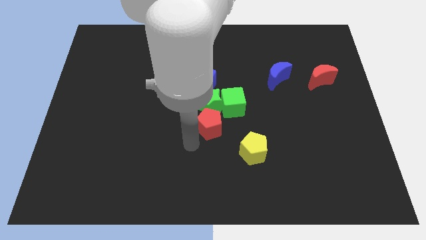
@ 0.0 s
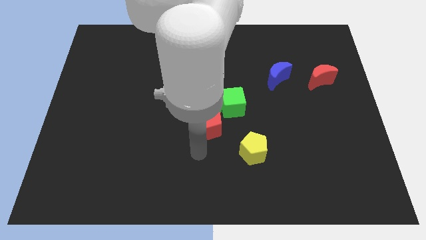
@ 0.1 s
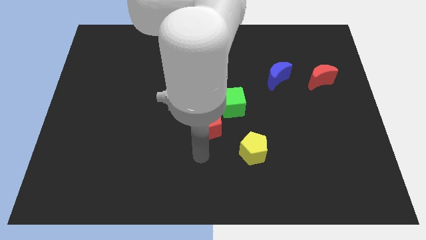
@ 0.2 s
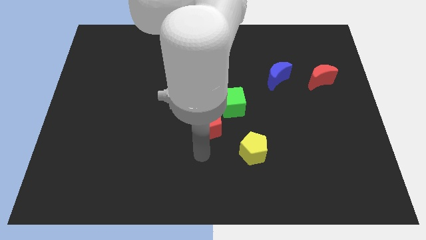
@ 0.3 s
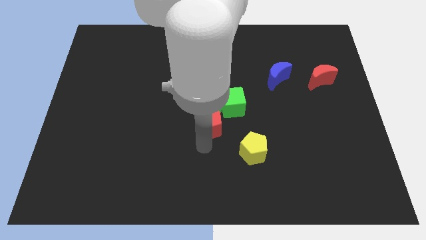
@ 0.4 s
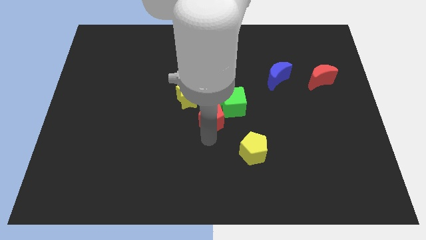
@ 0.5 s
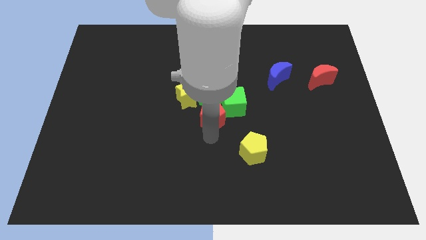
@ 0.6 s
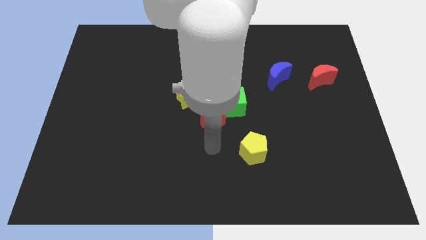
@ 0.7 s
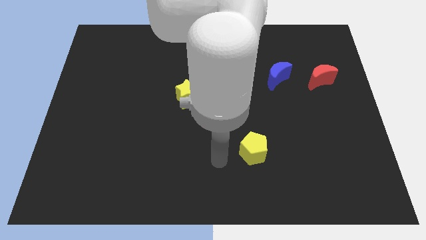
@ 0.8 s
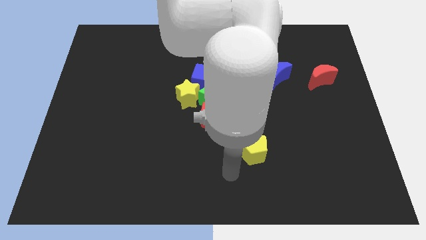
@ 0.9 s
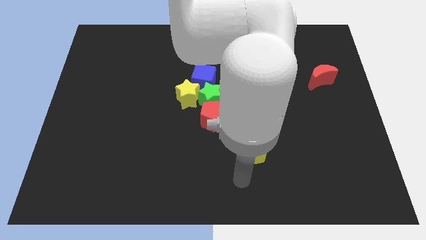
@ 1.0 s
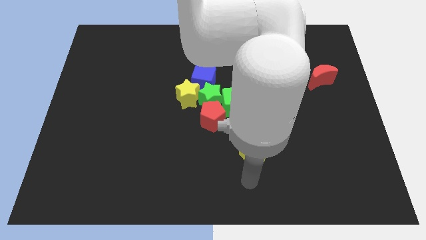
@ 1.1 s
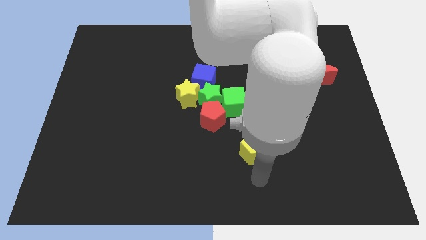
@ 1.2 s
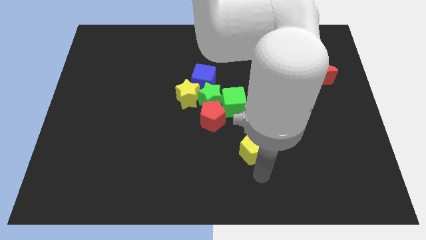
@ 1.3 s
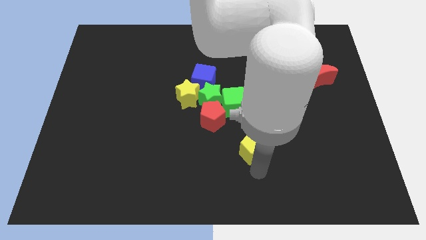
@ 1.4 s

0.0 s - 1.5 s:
point your arm below yellow star

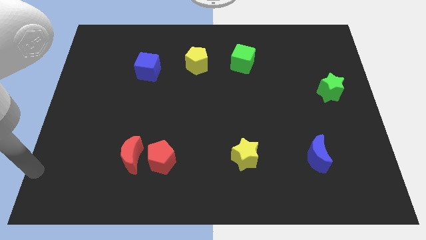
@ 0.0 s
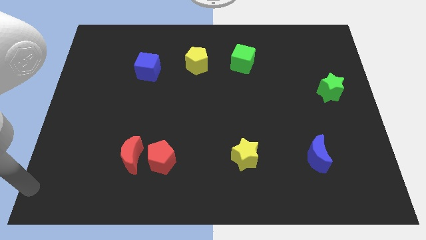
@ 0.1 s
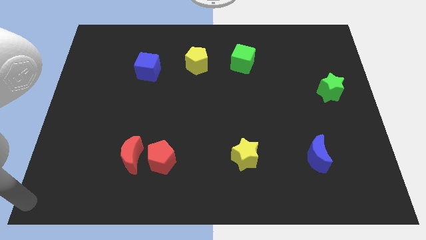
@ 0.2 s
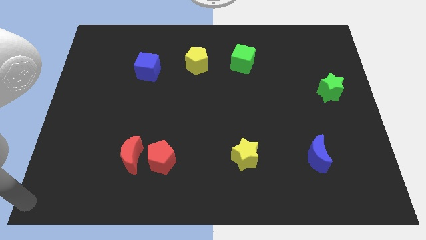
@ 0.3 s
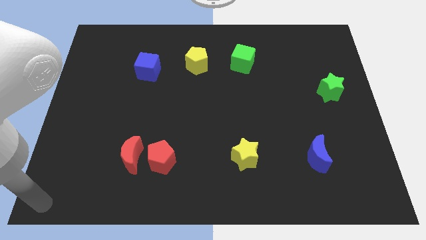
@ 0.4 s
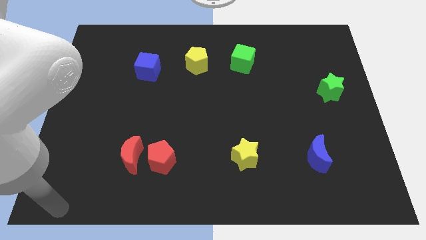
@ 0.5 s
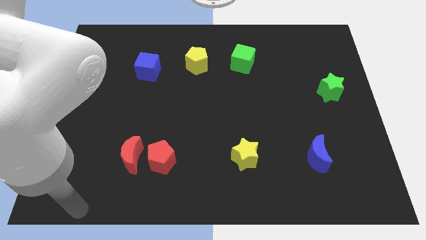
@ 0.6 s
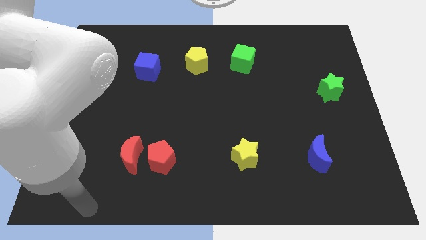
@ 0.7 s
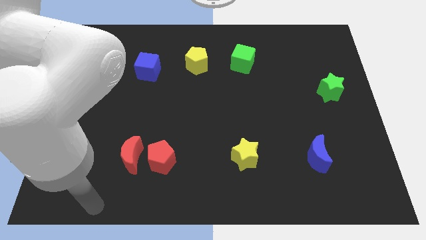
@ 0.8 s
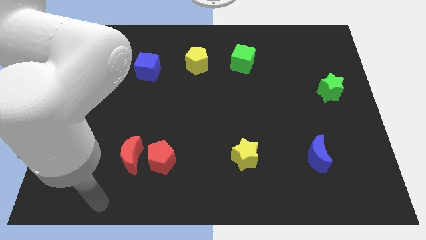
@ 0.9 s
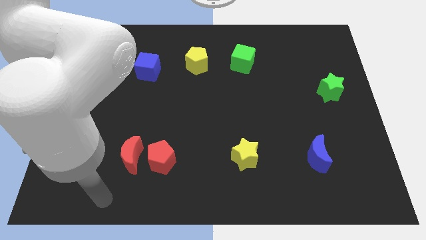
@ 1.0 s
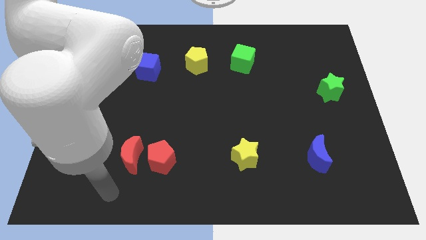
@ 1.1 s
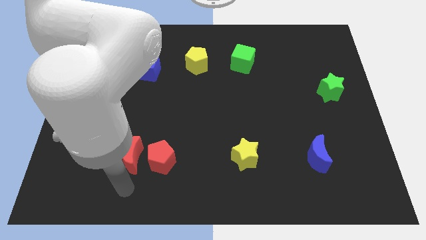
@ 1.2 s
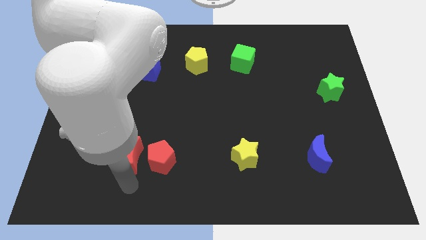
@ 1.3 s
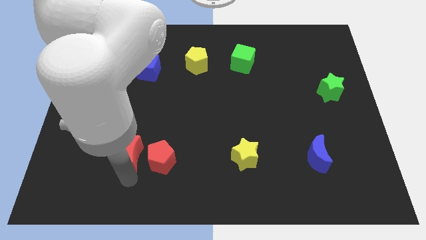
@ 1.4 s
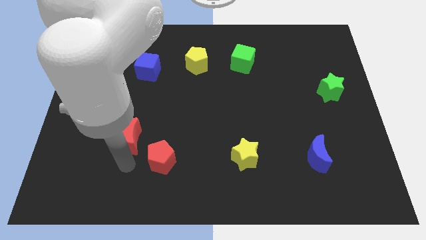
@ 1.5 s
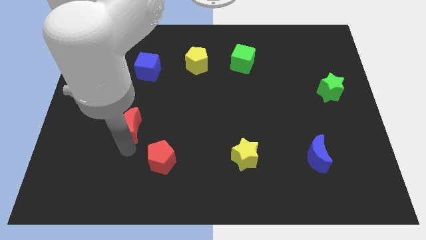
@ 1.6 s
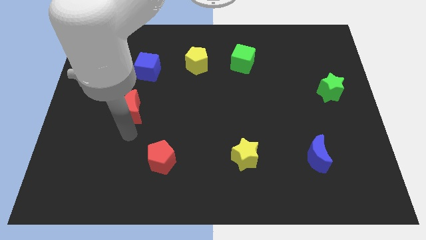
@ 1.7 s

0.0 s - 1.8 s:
separate the red crescent from the red pentagon

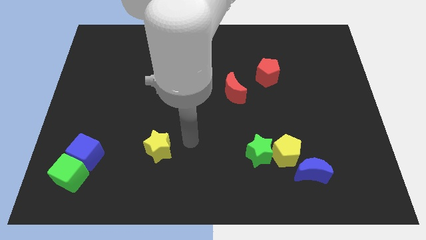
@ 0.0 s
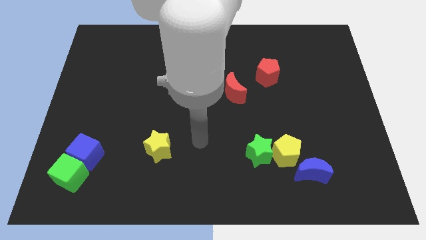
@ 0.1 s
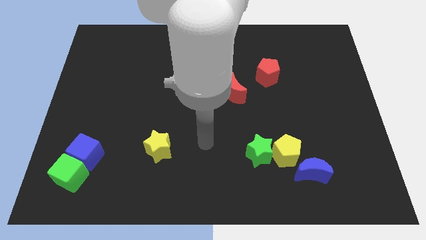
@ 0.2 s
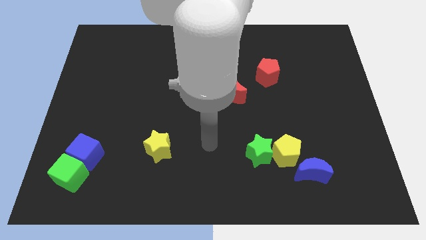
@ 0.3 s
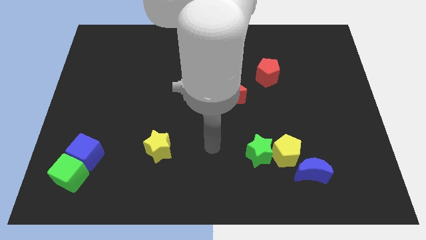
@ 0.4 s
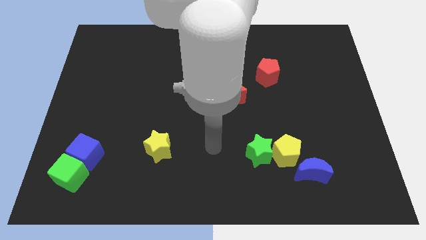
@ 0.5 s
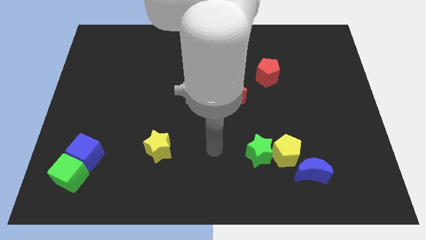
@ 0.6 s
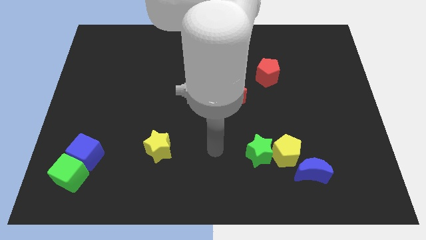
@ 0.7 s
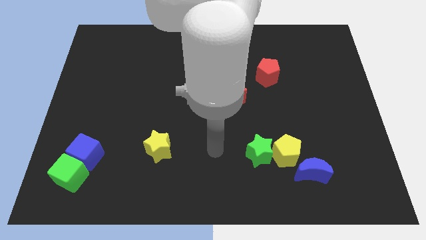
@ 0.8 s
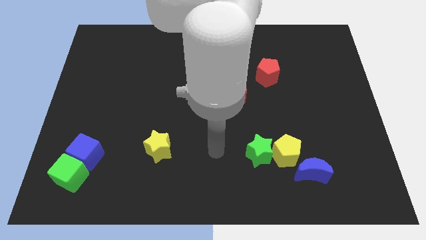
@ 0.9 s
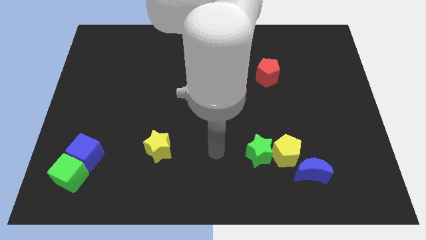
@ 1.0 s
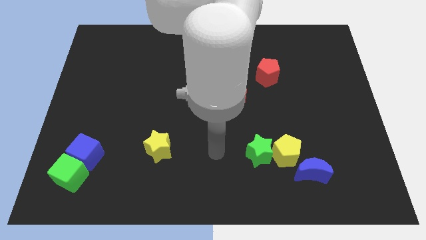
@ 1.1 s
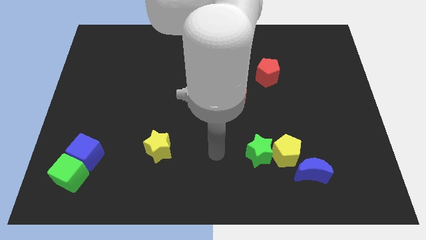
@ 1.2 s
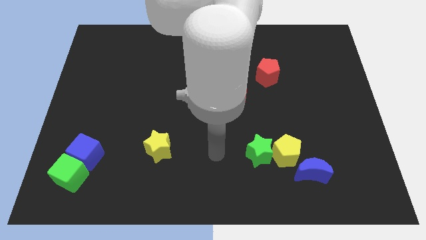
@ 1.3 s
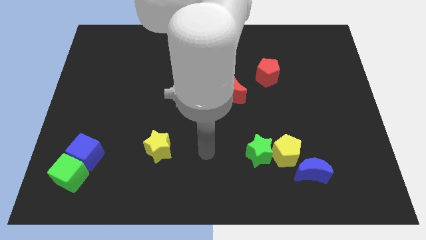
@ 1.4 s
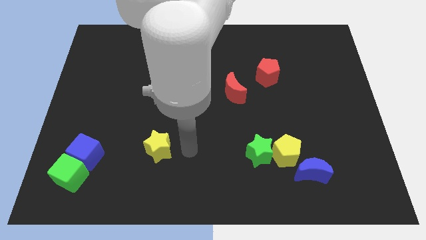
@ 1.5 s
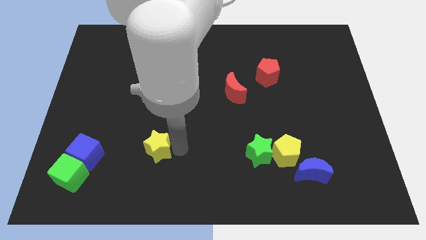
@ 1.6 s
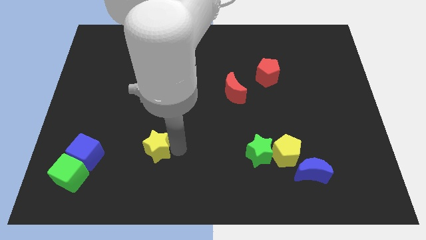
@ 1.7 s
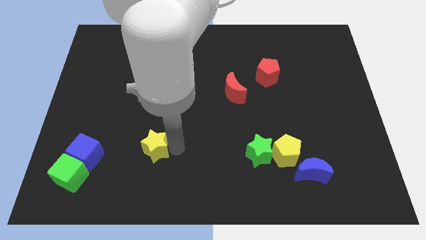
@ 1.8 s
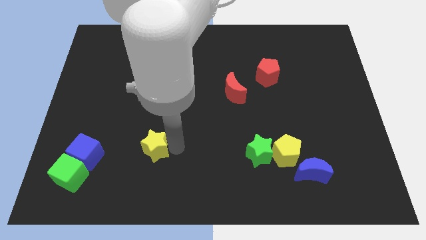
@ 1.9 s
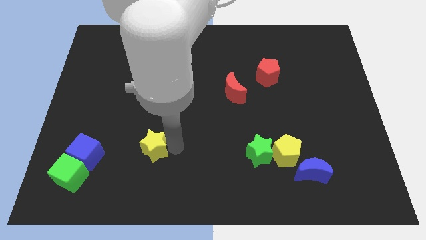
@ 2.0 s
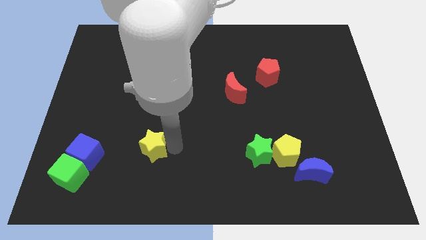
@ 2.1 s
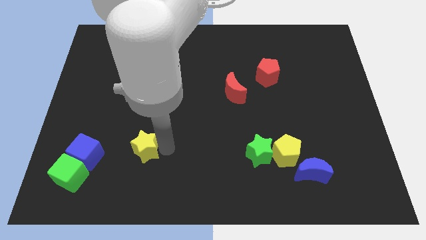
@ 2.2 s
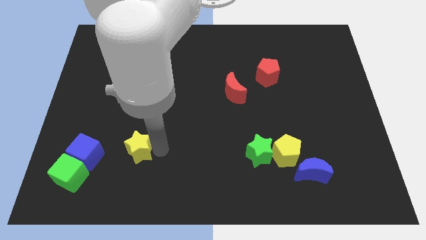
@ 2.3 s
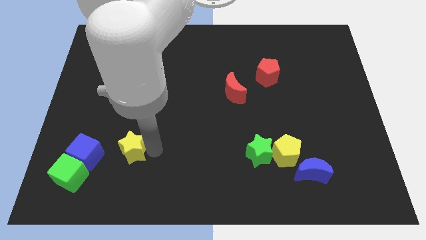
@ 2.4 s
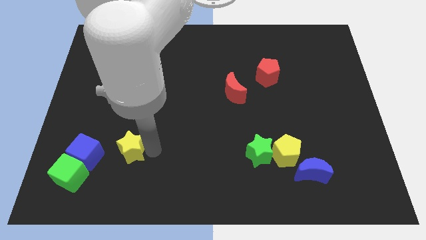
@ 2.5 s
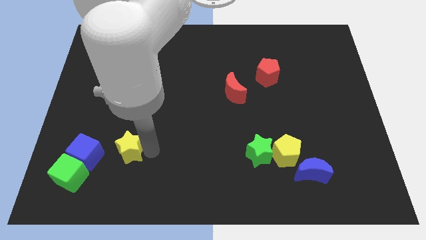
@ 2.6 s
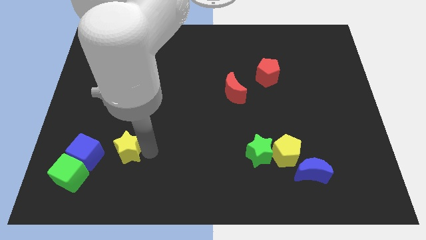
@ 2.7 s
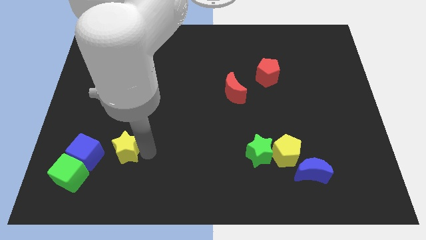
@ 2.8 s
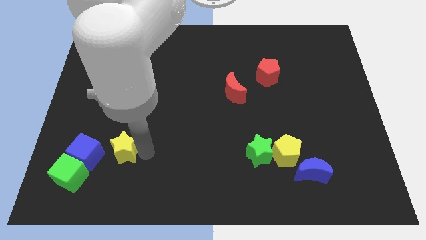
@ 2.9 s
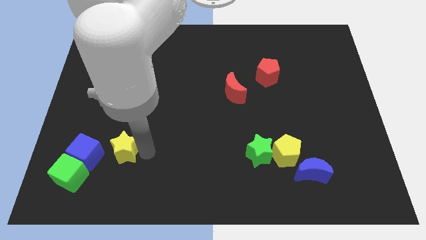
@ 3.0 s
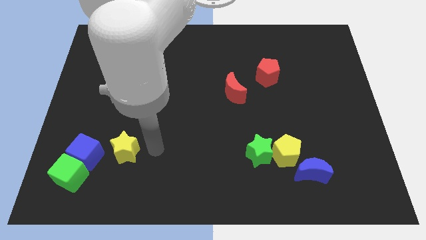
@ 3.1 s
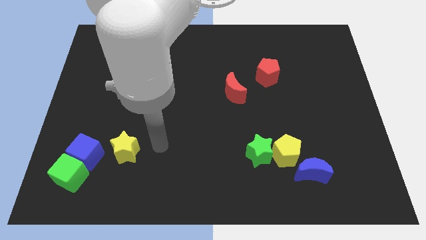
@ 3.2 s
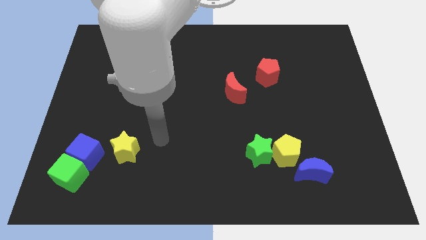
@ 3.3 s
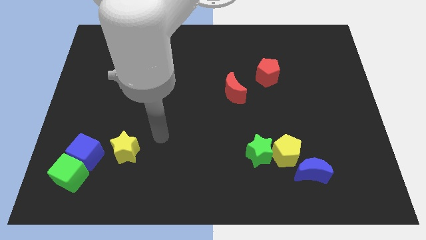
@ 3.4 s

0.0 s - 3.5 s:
push the yellow star into the blue cube

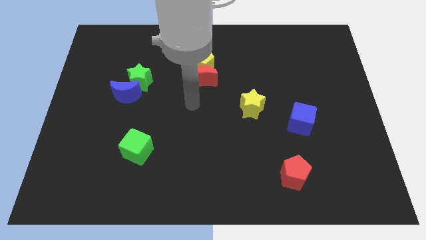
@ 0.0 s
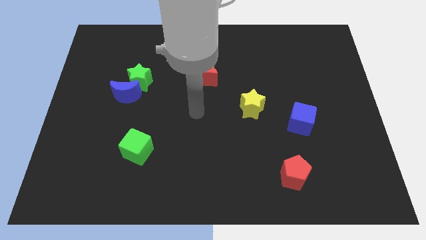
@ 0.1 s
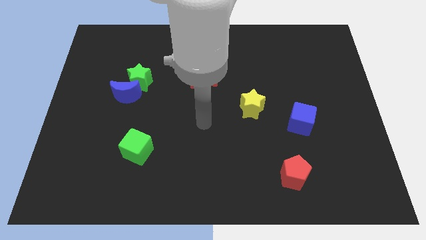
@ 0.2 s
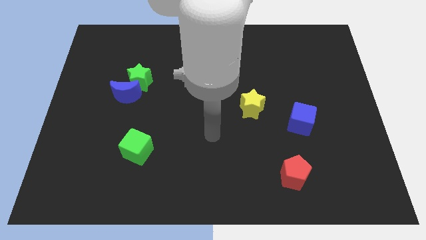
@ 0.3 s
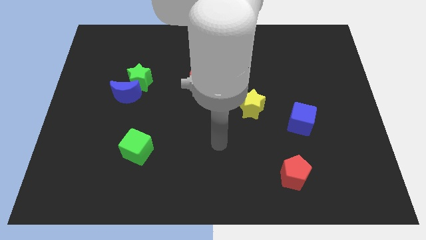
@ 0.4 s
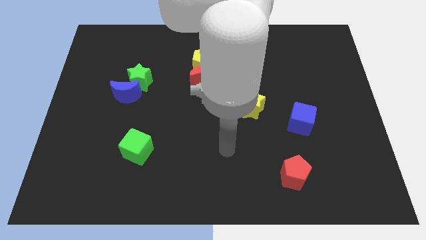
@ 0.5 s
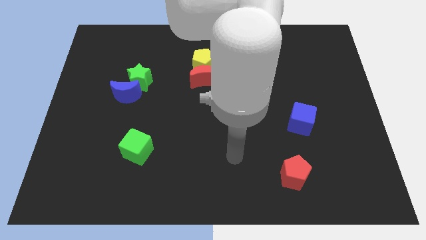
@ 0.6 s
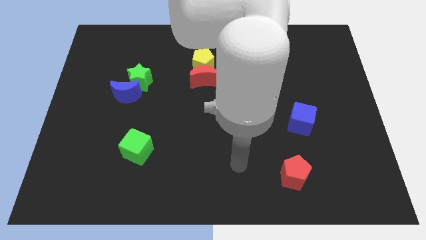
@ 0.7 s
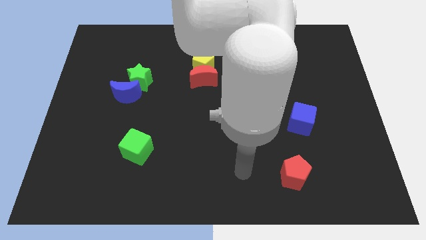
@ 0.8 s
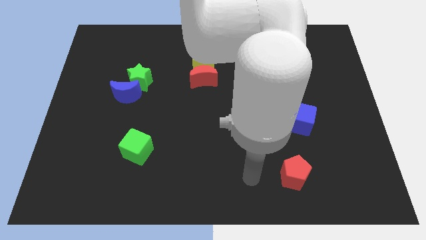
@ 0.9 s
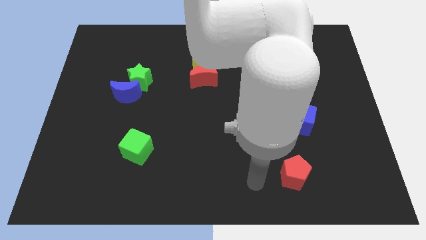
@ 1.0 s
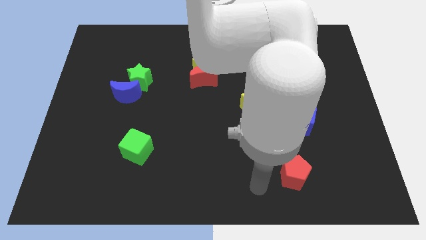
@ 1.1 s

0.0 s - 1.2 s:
move the arm away from the red crescent

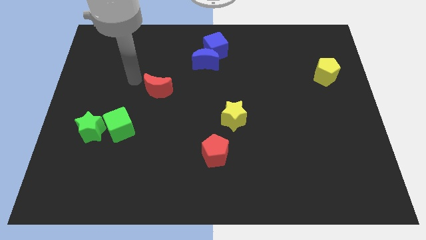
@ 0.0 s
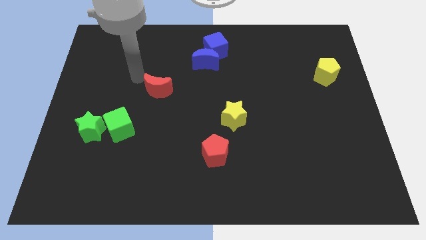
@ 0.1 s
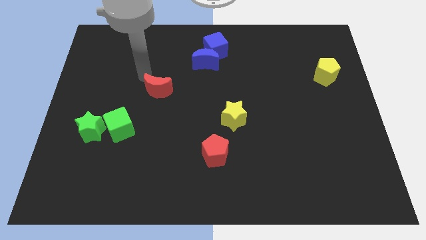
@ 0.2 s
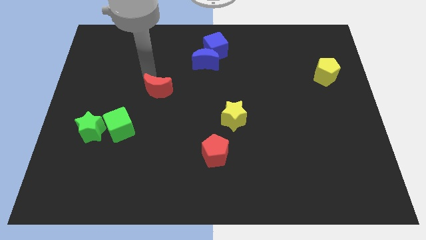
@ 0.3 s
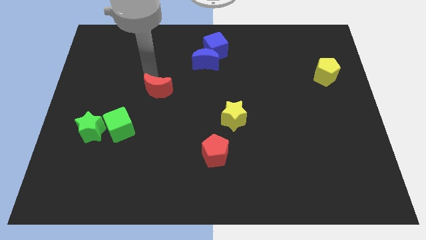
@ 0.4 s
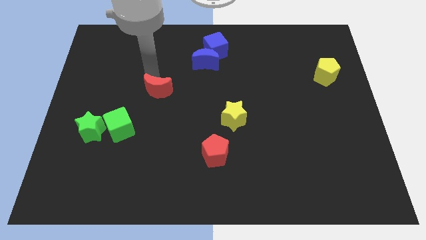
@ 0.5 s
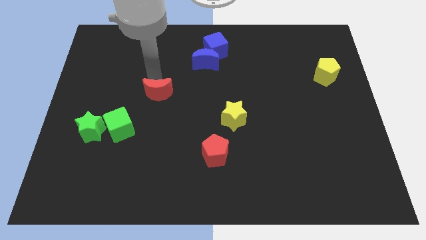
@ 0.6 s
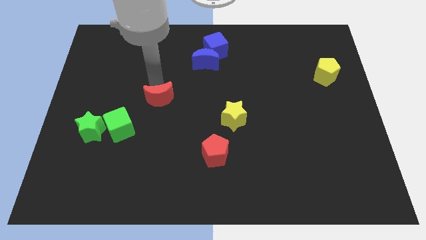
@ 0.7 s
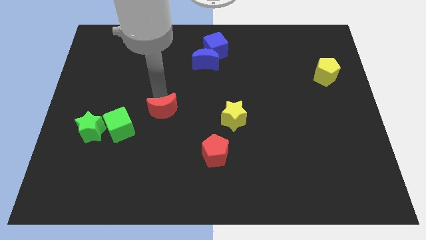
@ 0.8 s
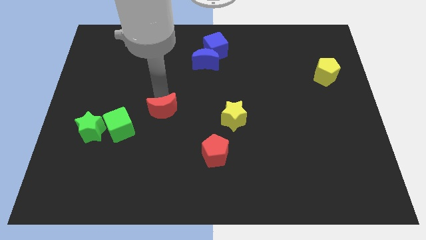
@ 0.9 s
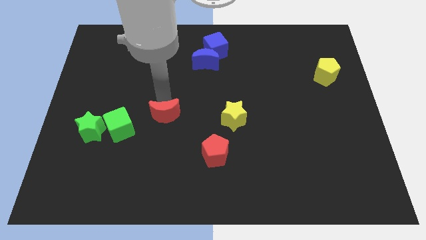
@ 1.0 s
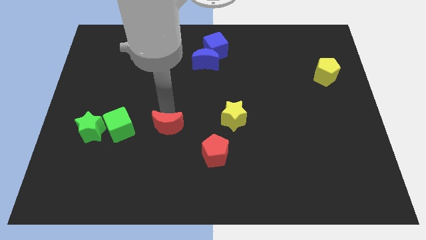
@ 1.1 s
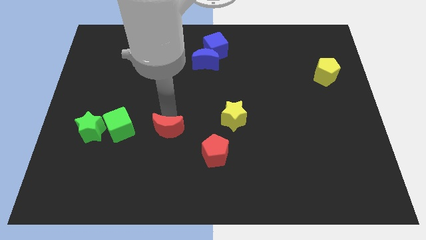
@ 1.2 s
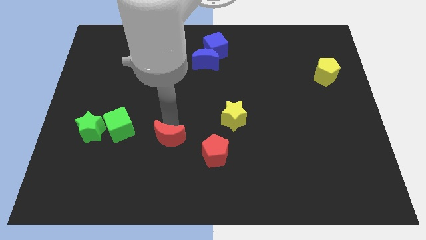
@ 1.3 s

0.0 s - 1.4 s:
move the red moon right to the green cube
